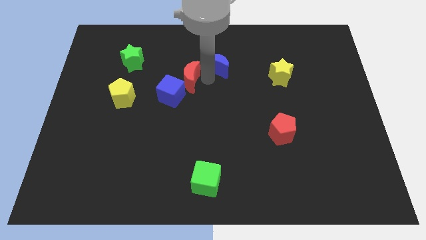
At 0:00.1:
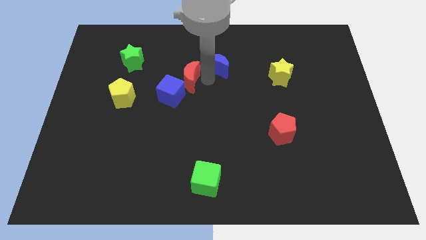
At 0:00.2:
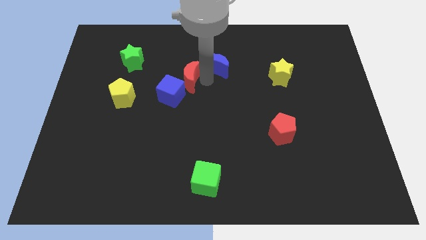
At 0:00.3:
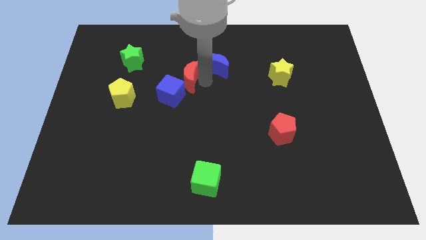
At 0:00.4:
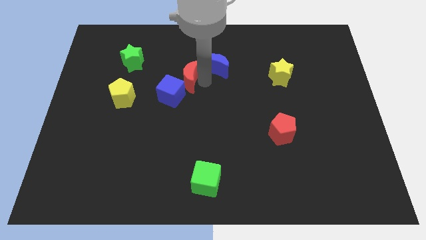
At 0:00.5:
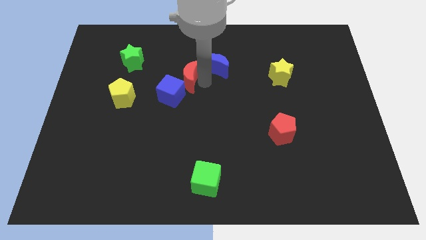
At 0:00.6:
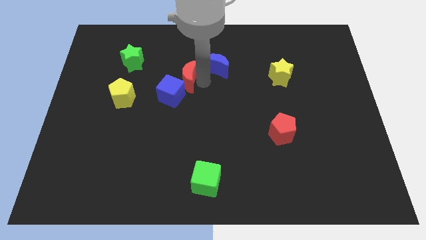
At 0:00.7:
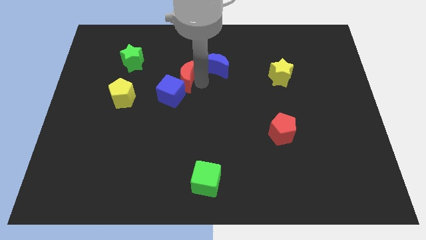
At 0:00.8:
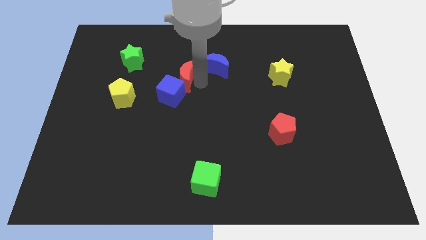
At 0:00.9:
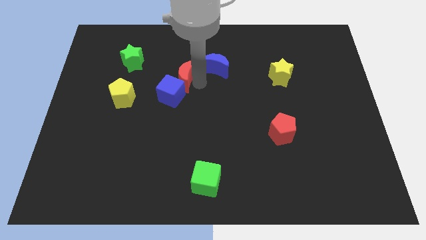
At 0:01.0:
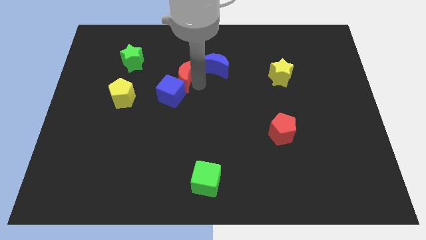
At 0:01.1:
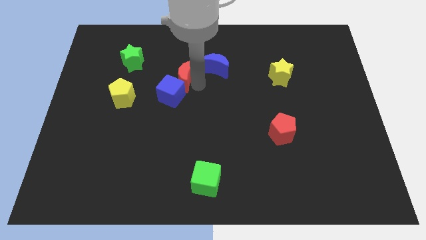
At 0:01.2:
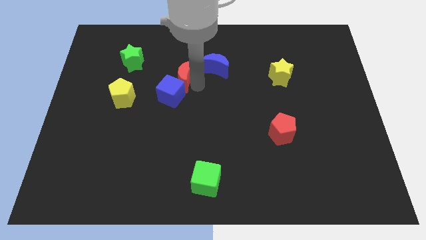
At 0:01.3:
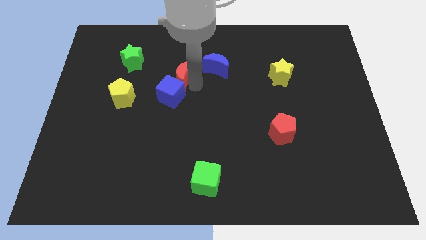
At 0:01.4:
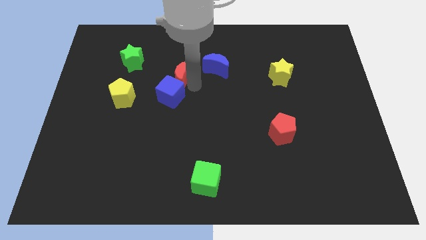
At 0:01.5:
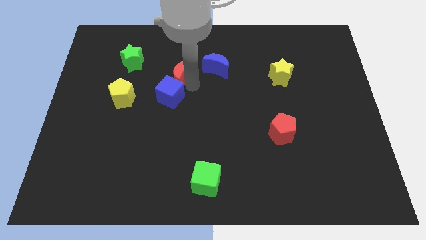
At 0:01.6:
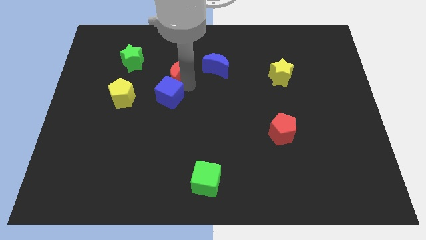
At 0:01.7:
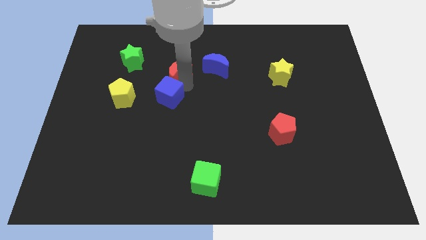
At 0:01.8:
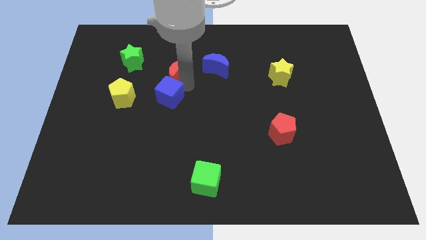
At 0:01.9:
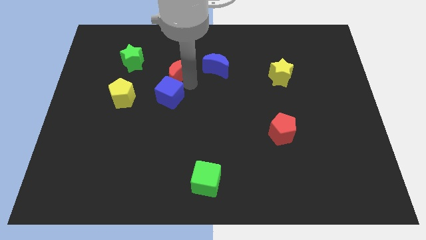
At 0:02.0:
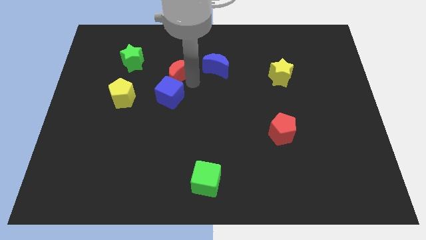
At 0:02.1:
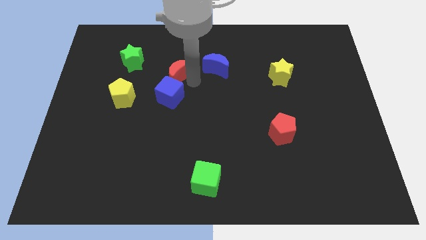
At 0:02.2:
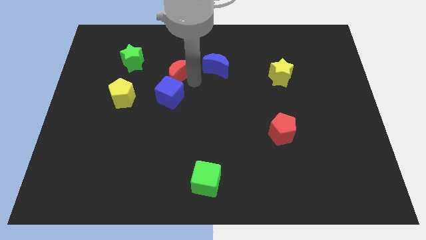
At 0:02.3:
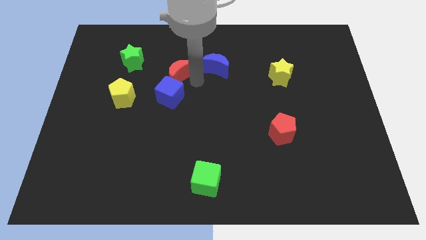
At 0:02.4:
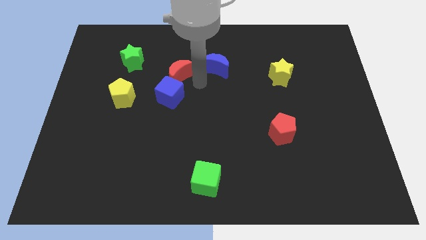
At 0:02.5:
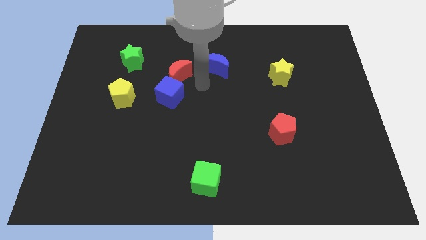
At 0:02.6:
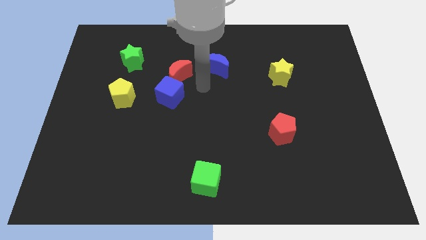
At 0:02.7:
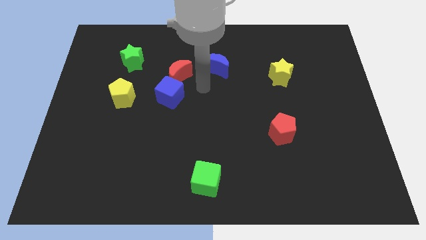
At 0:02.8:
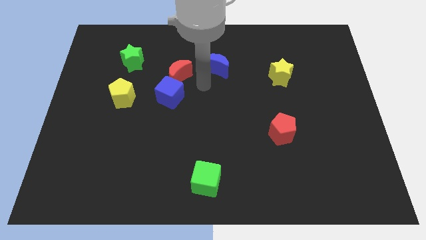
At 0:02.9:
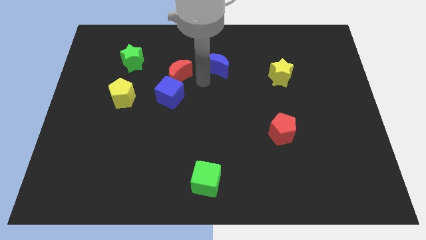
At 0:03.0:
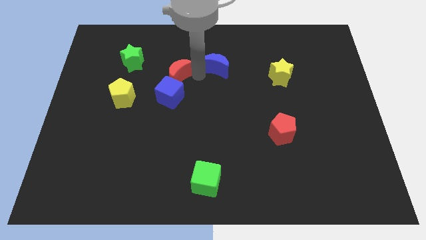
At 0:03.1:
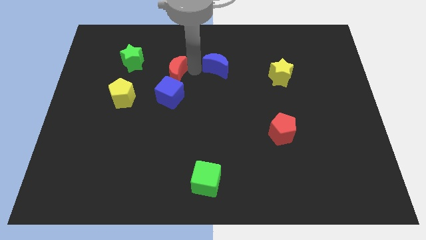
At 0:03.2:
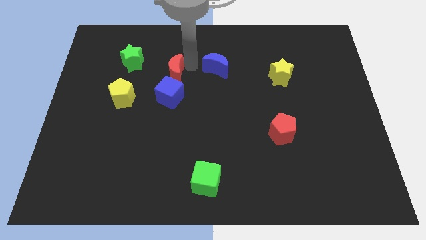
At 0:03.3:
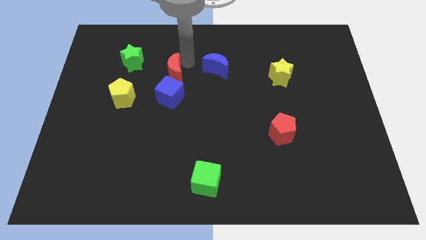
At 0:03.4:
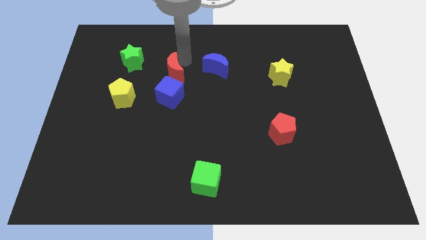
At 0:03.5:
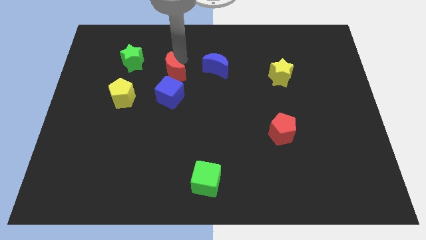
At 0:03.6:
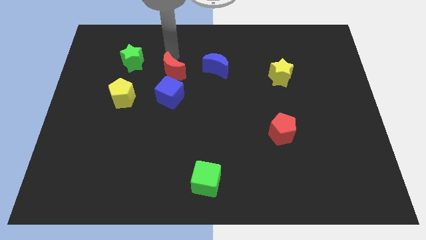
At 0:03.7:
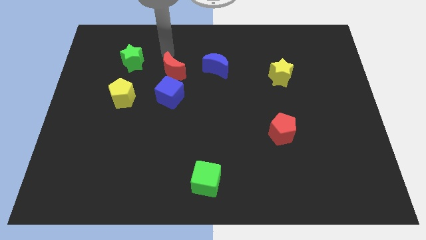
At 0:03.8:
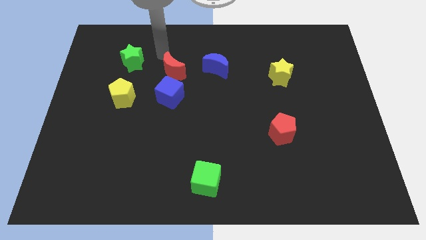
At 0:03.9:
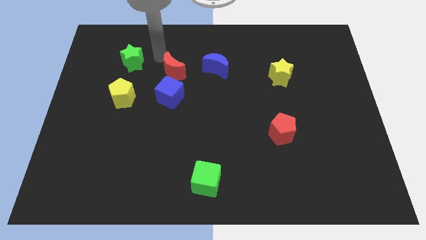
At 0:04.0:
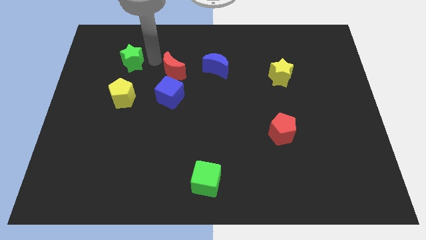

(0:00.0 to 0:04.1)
push the red crescent to the top of the blue cube

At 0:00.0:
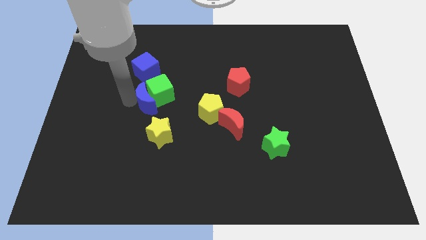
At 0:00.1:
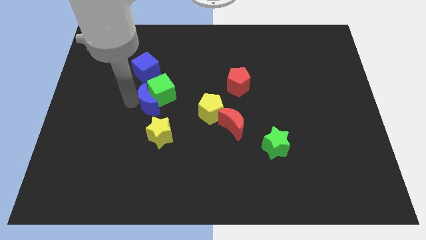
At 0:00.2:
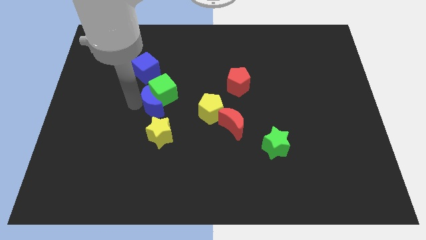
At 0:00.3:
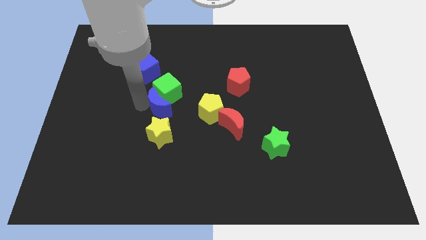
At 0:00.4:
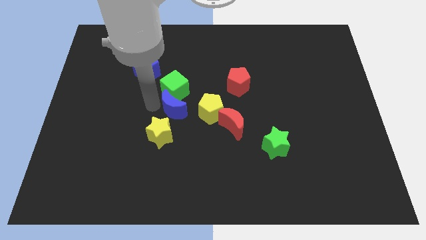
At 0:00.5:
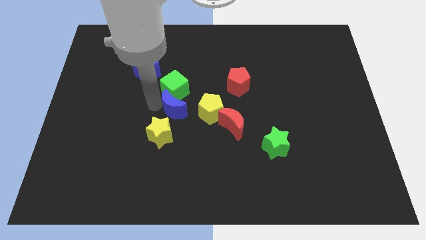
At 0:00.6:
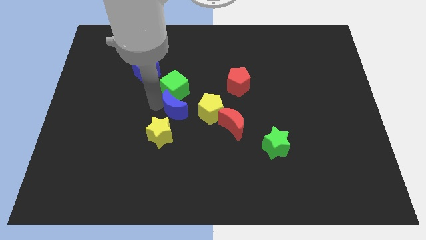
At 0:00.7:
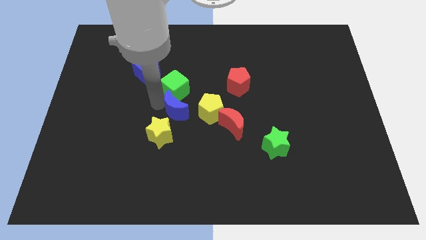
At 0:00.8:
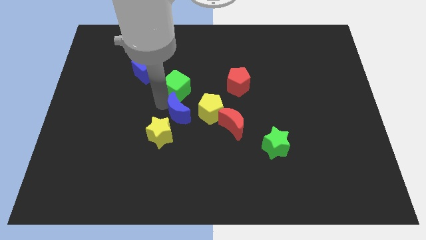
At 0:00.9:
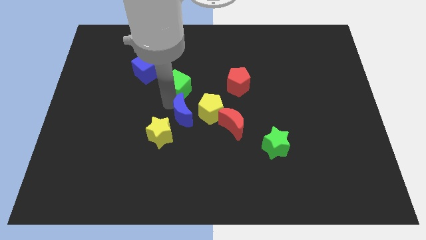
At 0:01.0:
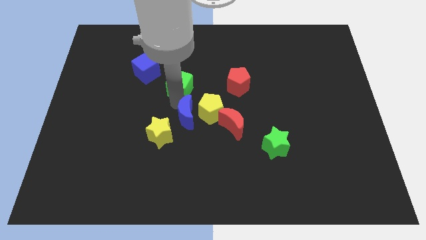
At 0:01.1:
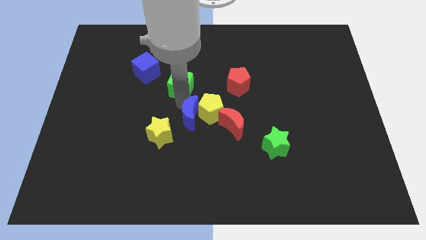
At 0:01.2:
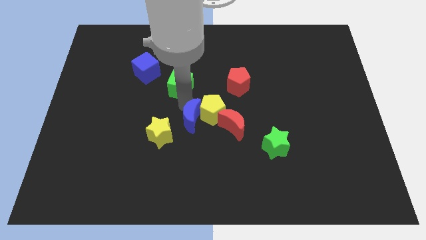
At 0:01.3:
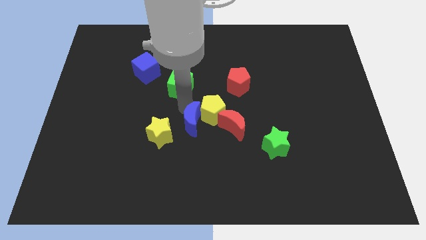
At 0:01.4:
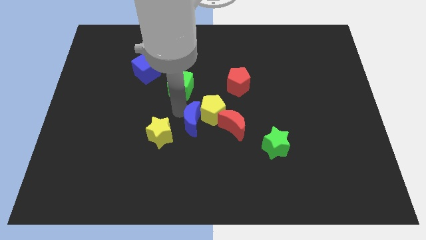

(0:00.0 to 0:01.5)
separate blue moon and the green cube

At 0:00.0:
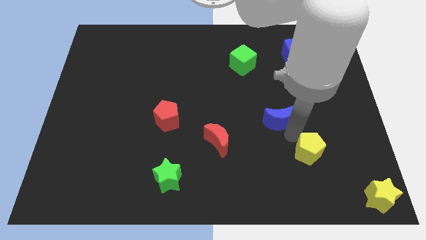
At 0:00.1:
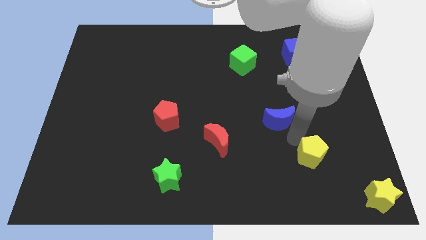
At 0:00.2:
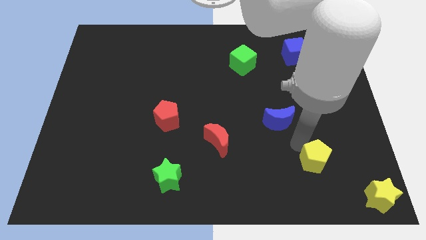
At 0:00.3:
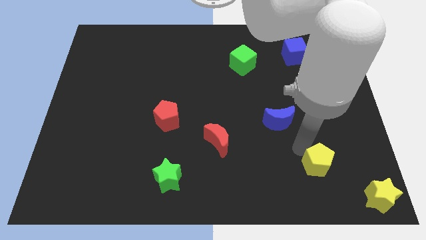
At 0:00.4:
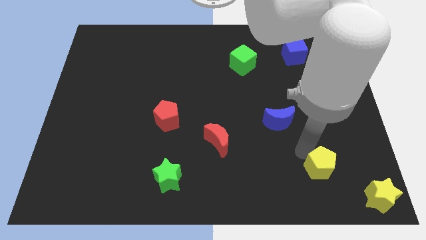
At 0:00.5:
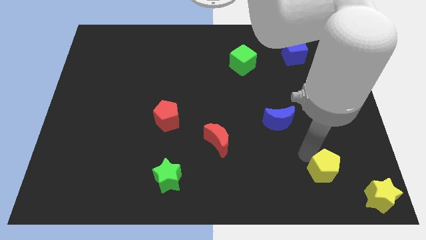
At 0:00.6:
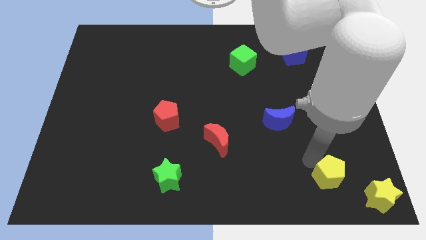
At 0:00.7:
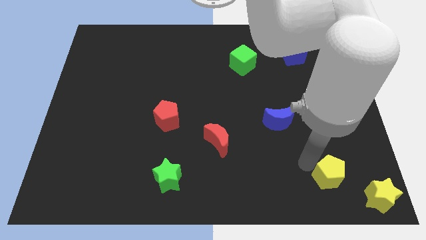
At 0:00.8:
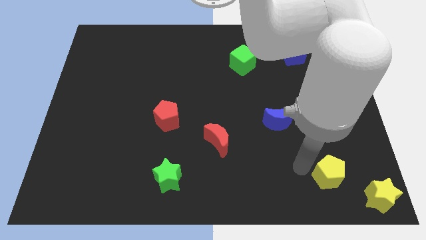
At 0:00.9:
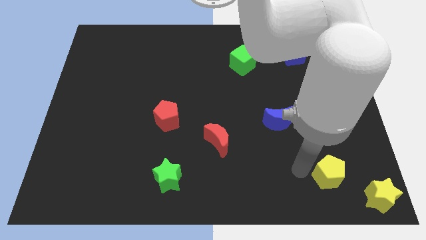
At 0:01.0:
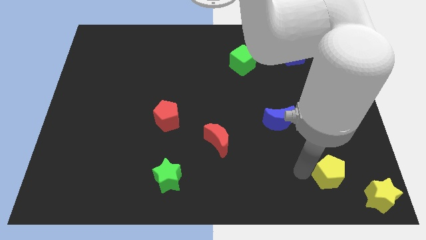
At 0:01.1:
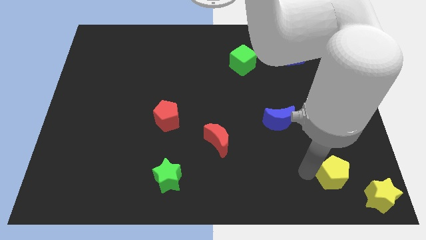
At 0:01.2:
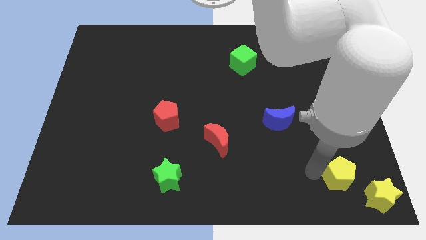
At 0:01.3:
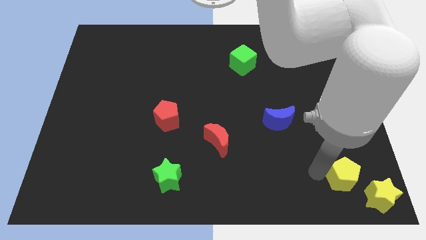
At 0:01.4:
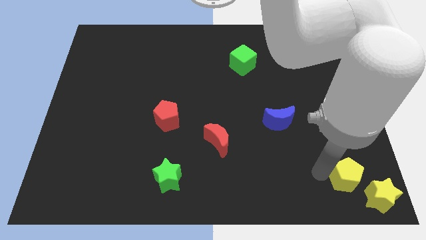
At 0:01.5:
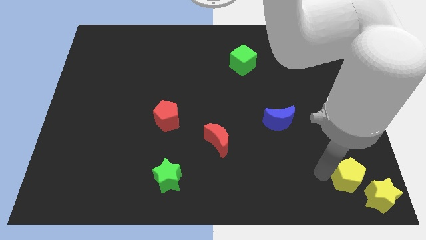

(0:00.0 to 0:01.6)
push yellow pentagon to the top left of the yellow star

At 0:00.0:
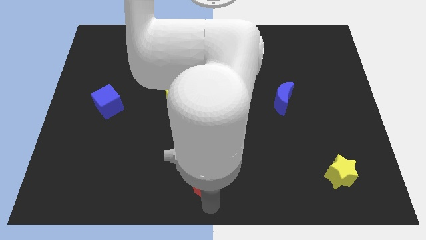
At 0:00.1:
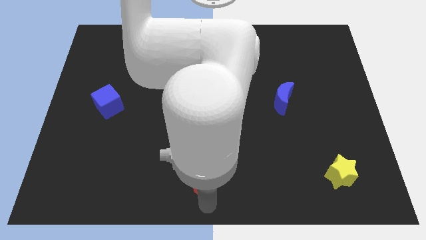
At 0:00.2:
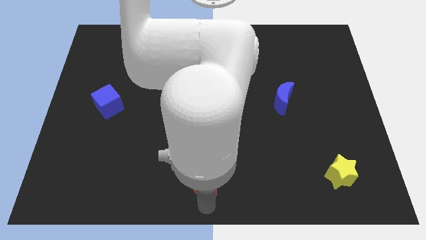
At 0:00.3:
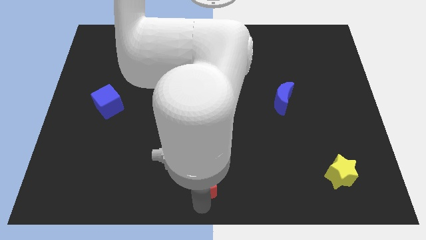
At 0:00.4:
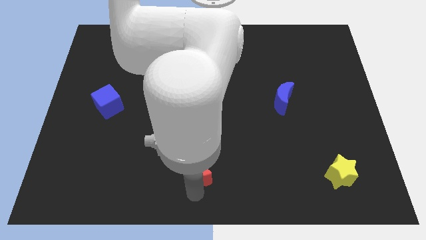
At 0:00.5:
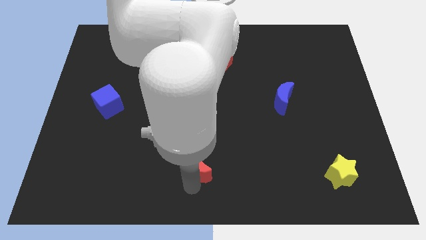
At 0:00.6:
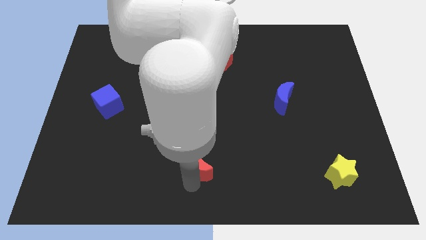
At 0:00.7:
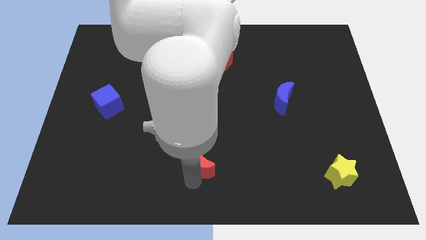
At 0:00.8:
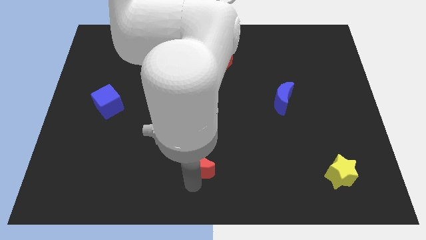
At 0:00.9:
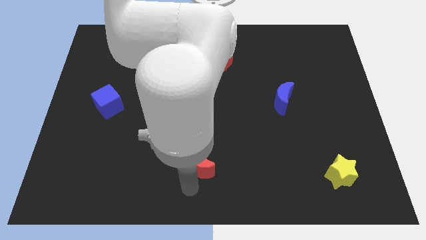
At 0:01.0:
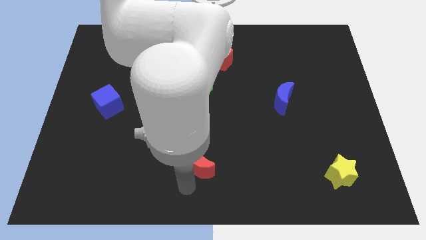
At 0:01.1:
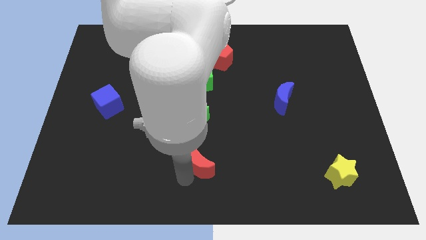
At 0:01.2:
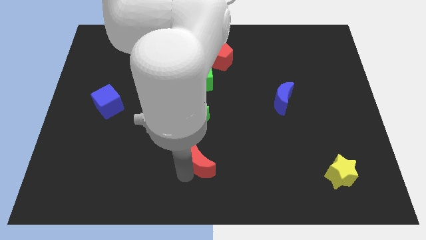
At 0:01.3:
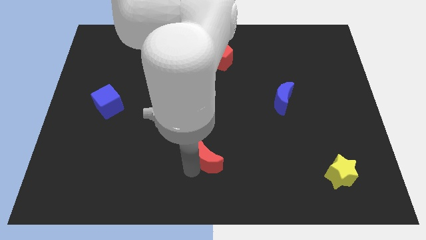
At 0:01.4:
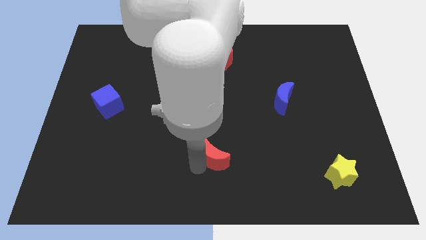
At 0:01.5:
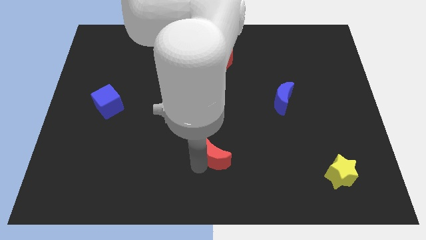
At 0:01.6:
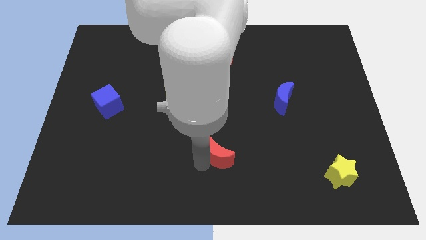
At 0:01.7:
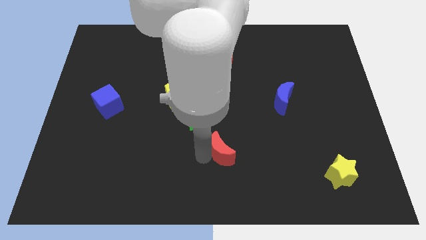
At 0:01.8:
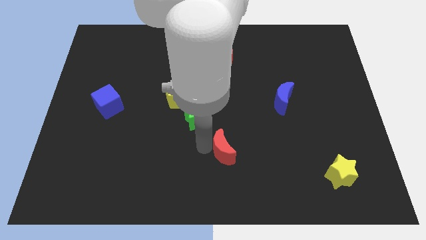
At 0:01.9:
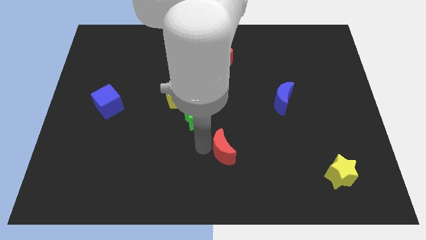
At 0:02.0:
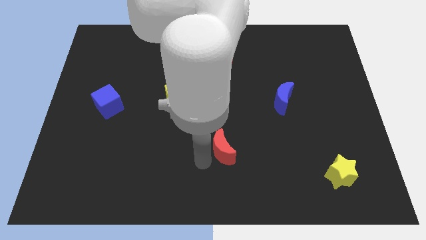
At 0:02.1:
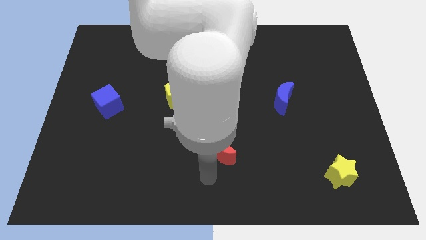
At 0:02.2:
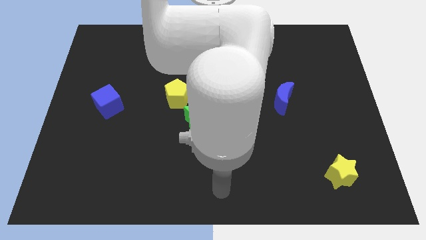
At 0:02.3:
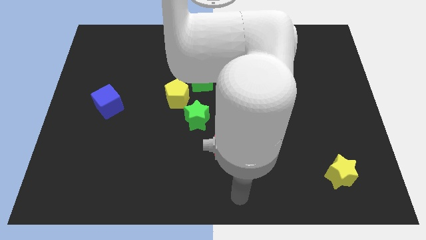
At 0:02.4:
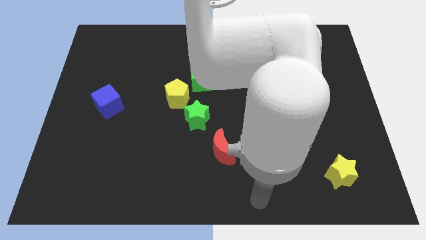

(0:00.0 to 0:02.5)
place the red moon diagonal to the green star
